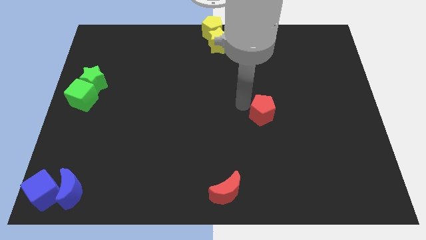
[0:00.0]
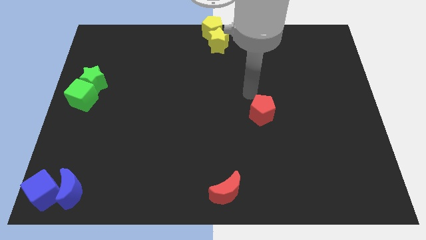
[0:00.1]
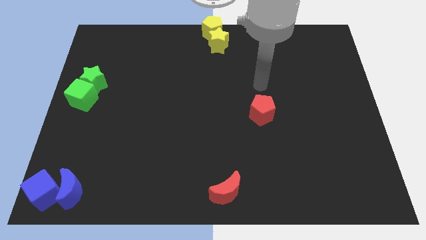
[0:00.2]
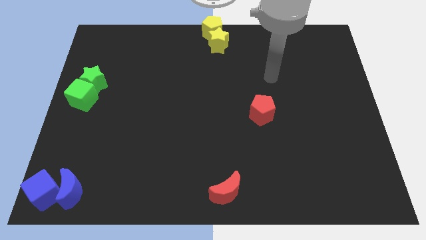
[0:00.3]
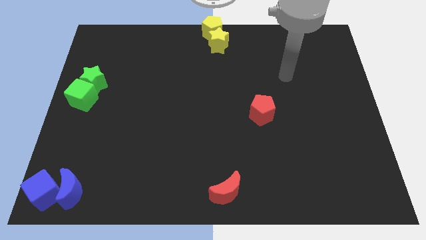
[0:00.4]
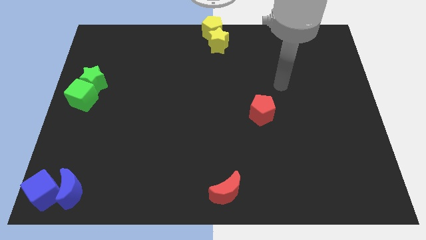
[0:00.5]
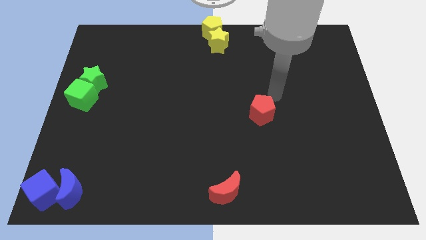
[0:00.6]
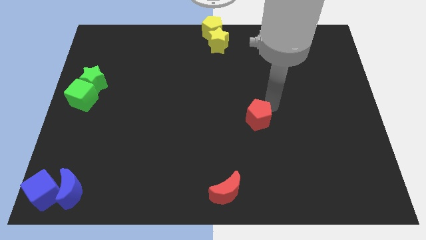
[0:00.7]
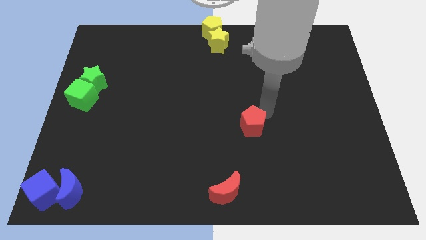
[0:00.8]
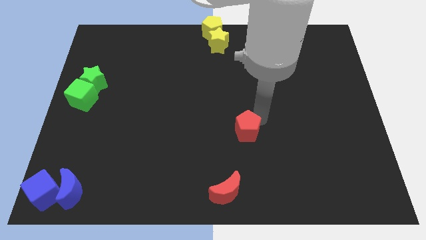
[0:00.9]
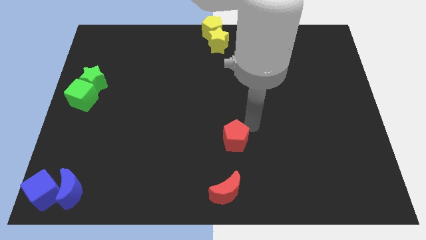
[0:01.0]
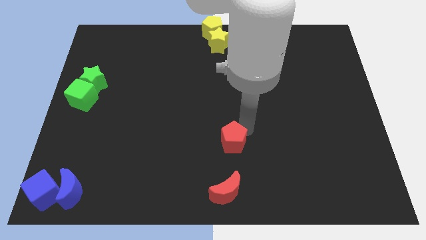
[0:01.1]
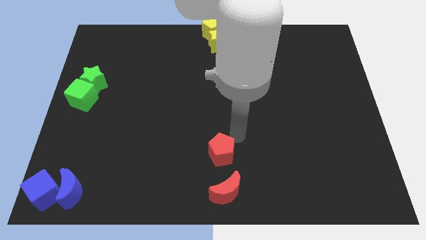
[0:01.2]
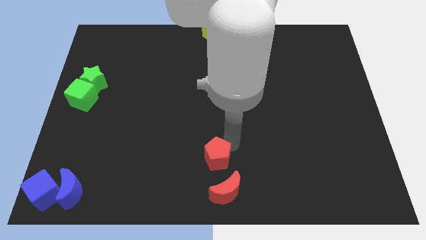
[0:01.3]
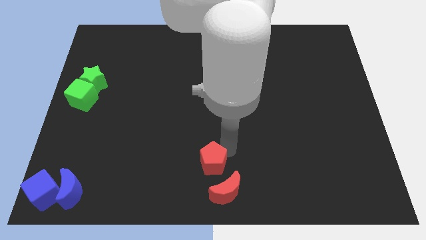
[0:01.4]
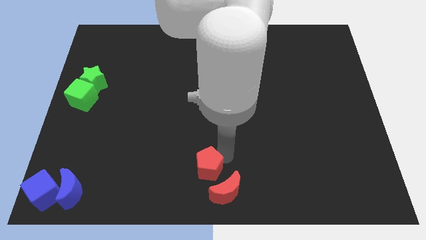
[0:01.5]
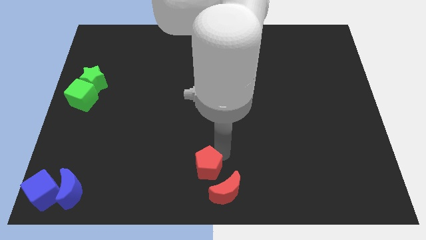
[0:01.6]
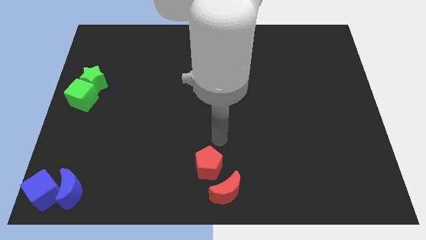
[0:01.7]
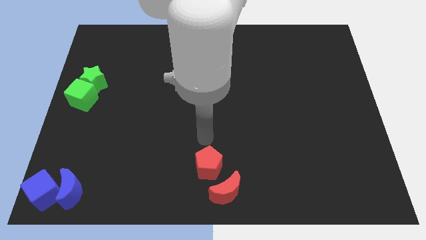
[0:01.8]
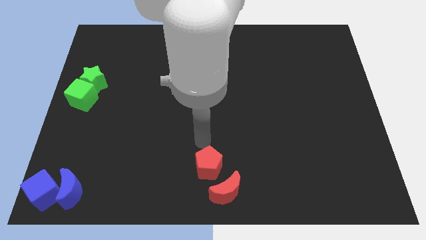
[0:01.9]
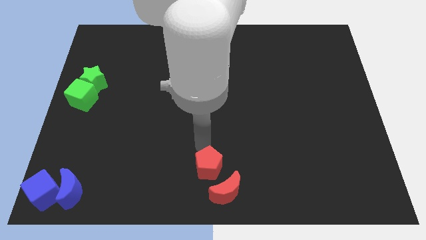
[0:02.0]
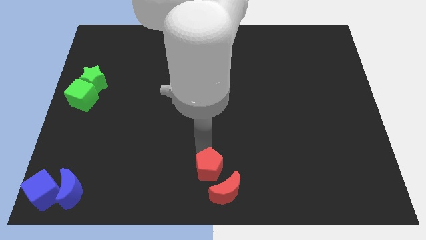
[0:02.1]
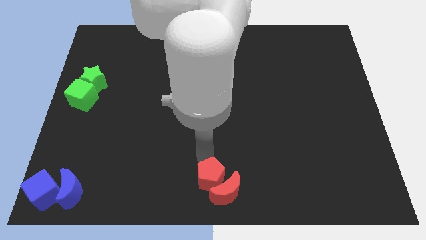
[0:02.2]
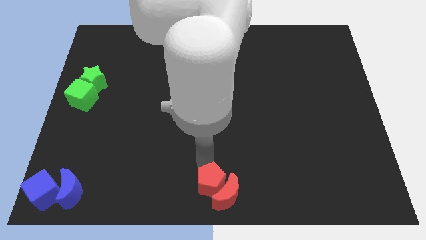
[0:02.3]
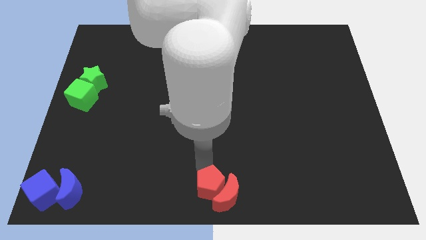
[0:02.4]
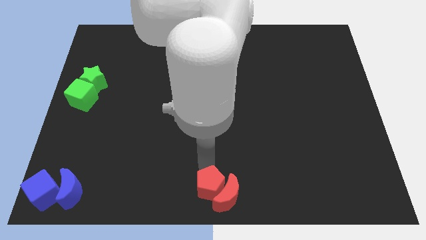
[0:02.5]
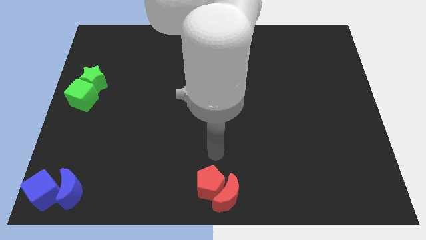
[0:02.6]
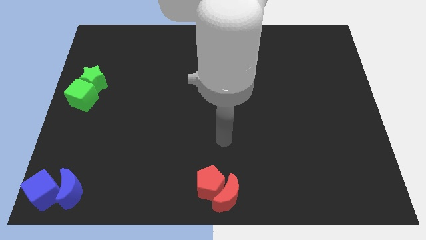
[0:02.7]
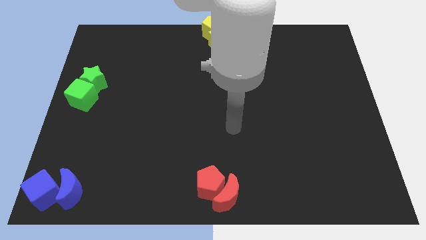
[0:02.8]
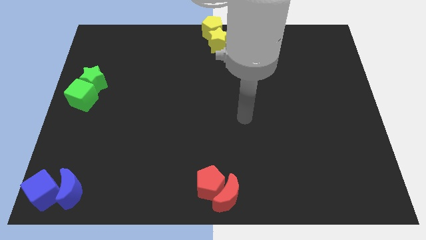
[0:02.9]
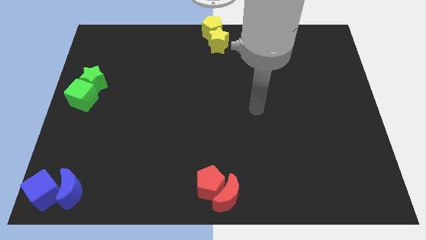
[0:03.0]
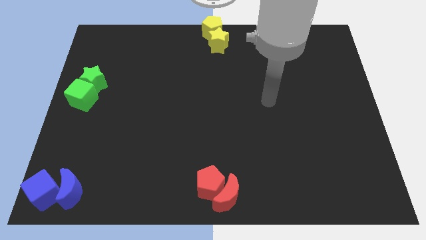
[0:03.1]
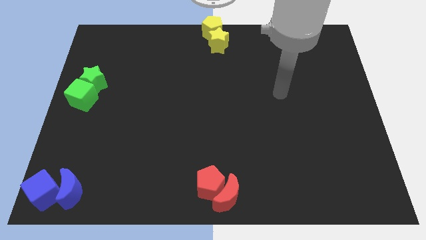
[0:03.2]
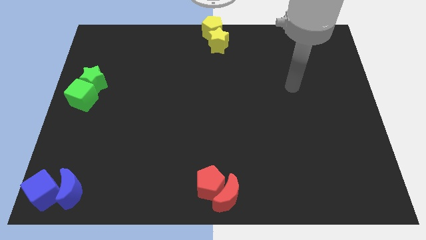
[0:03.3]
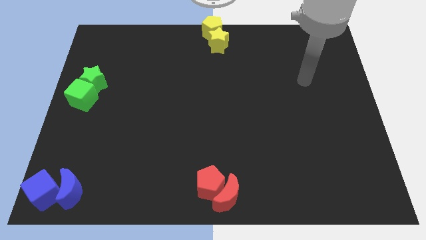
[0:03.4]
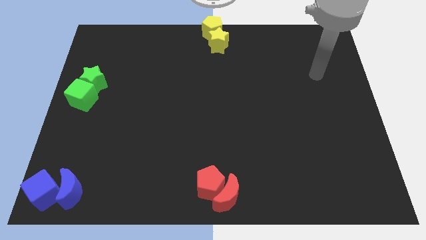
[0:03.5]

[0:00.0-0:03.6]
move red pentagon to the top left side of the red crescent

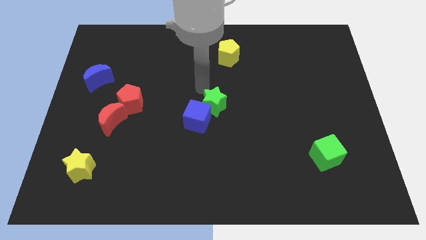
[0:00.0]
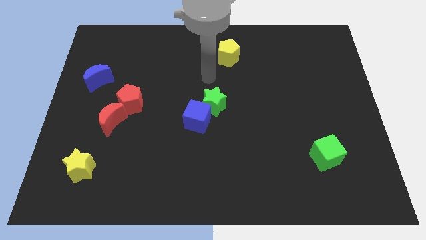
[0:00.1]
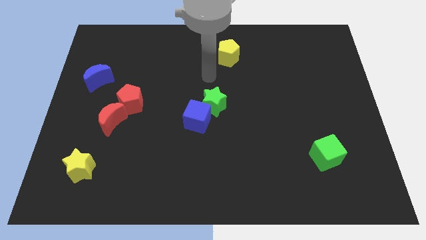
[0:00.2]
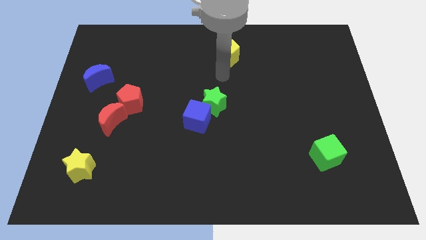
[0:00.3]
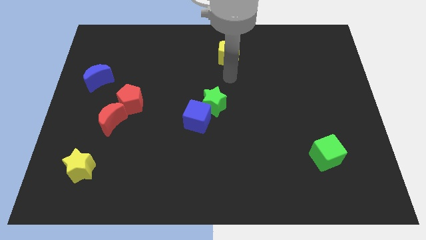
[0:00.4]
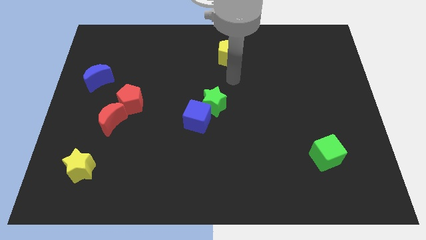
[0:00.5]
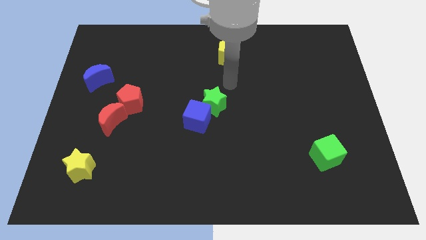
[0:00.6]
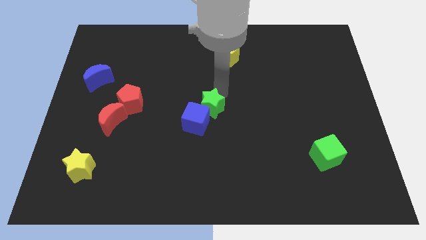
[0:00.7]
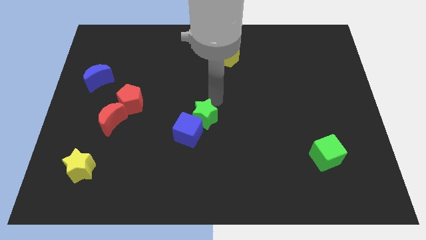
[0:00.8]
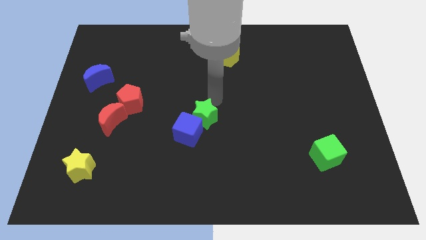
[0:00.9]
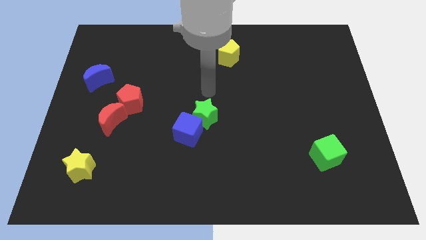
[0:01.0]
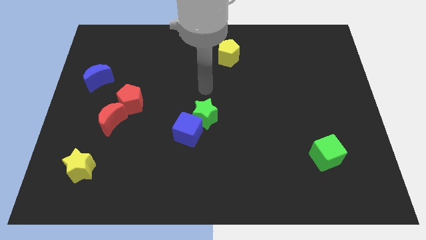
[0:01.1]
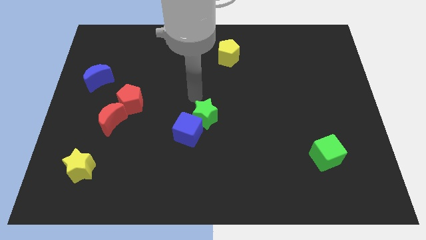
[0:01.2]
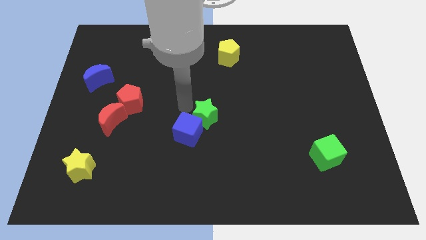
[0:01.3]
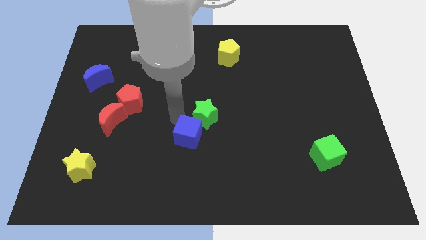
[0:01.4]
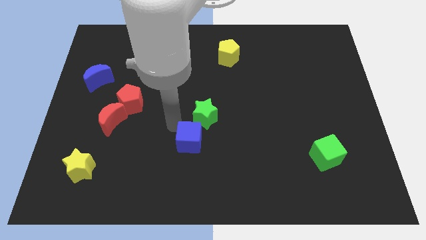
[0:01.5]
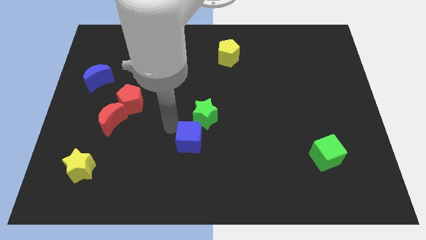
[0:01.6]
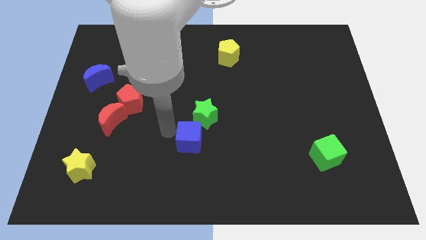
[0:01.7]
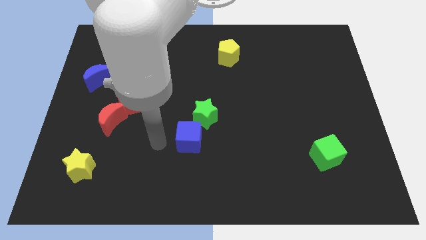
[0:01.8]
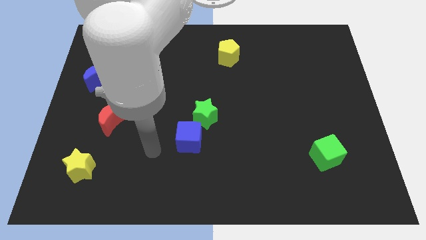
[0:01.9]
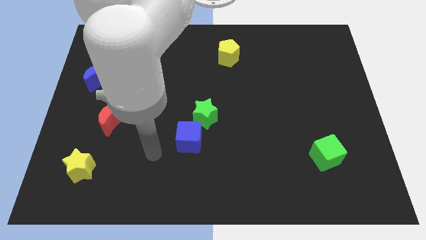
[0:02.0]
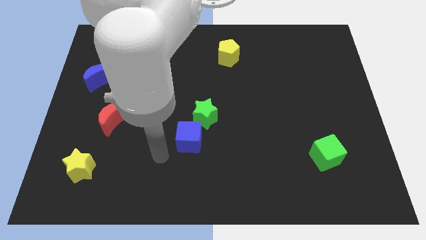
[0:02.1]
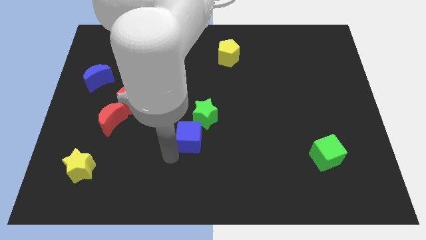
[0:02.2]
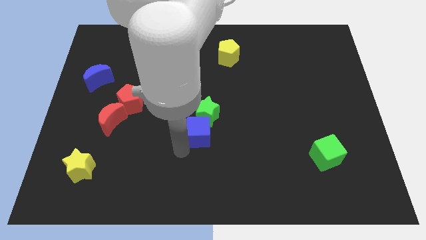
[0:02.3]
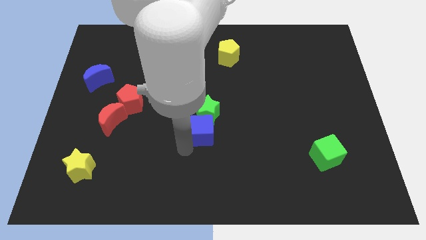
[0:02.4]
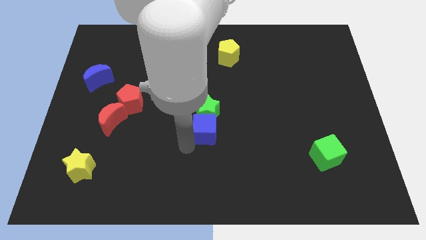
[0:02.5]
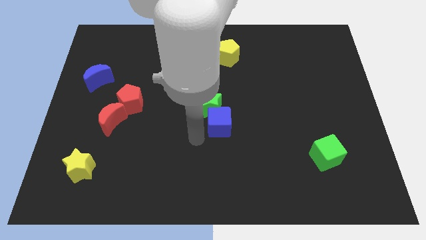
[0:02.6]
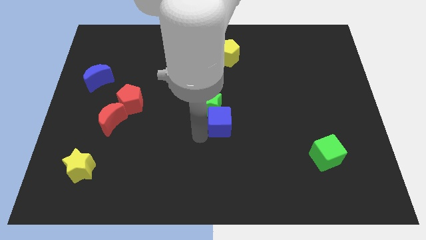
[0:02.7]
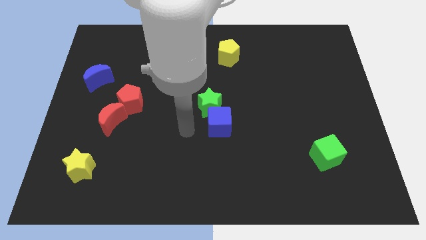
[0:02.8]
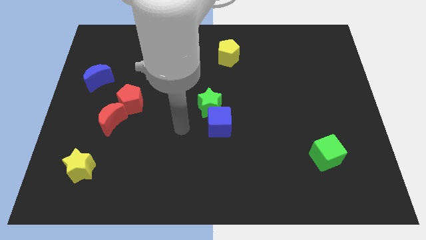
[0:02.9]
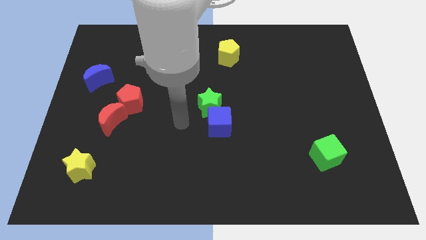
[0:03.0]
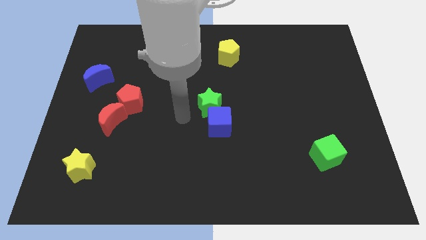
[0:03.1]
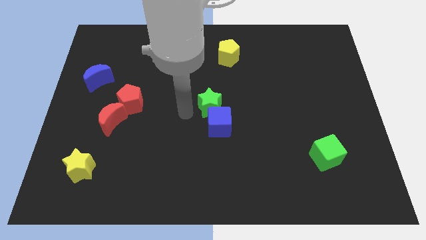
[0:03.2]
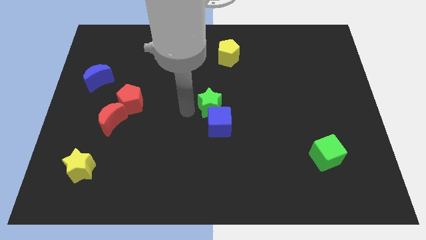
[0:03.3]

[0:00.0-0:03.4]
move the blue cube towards the green star

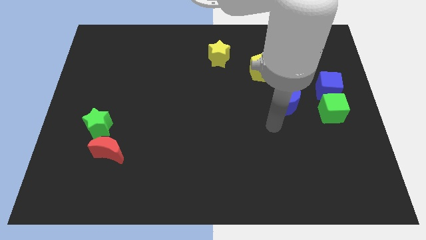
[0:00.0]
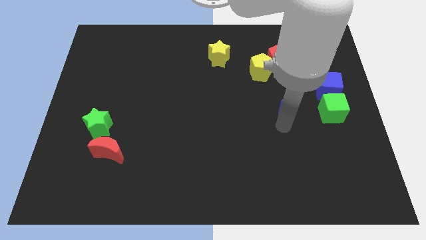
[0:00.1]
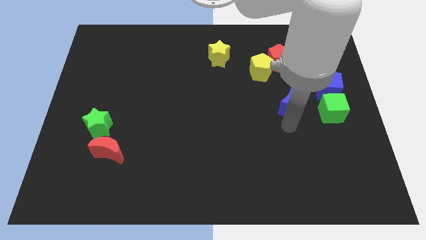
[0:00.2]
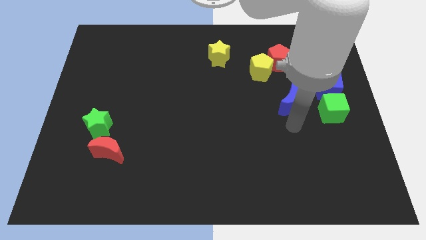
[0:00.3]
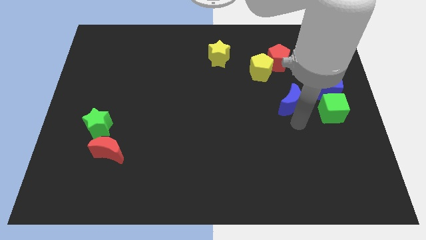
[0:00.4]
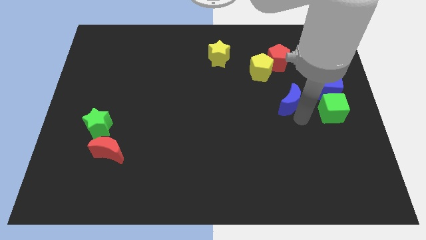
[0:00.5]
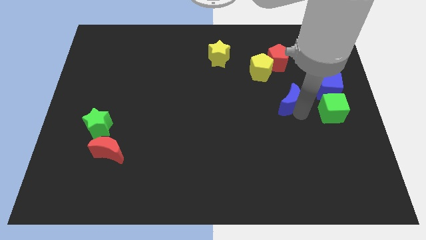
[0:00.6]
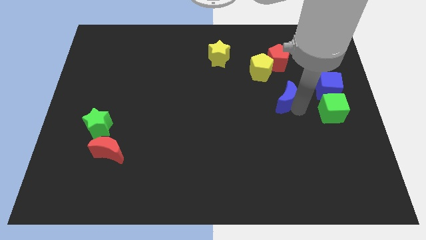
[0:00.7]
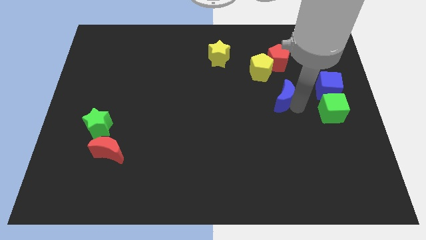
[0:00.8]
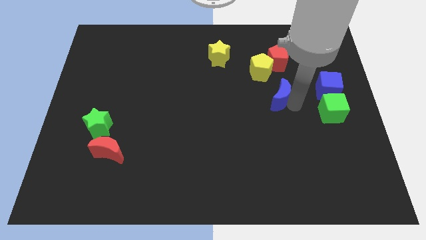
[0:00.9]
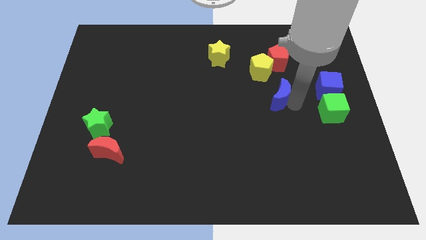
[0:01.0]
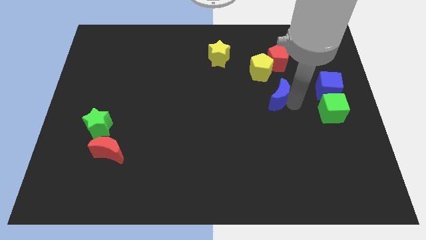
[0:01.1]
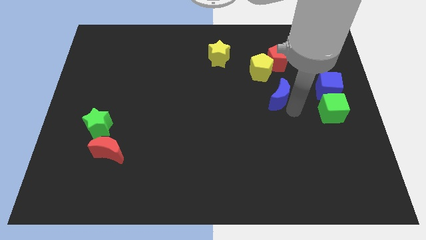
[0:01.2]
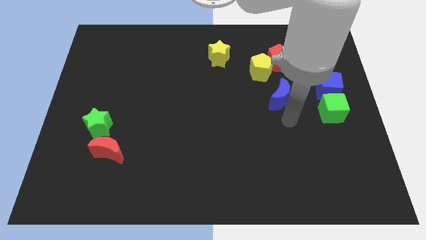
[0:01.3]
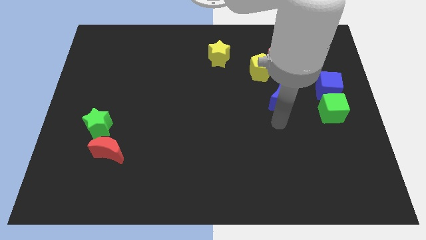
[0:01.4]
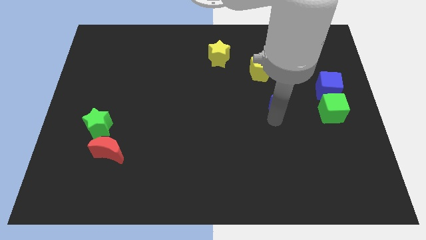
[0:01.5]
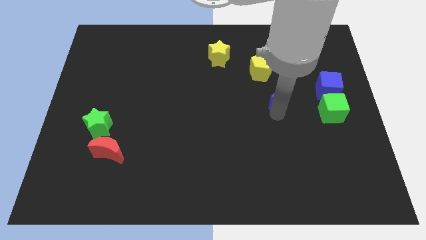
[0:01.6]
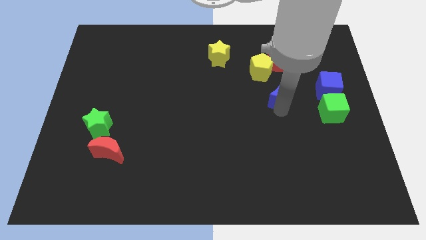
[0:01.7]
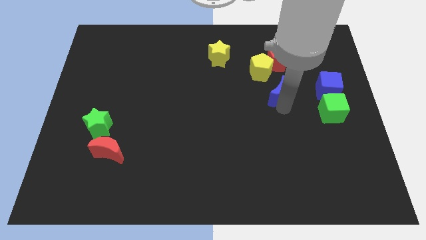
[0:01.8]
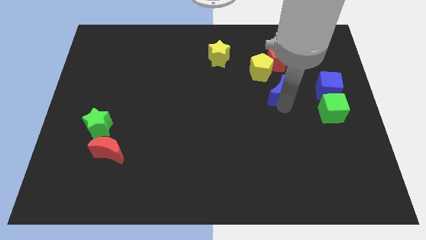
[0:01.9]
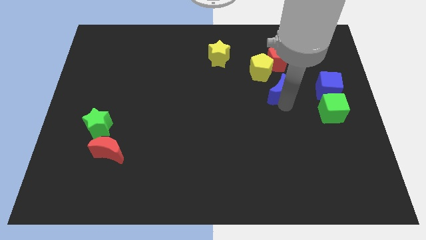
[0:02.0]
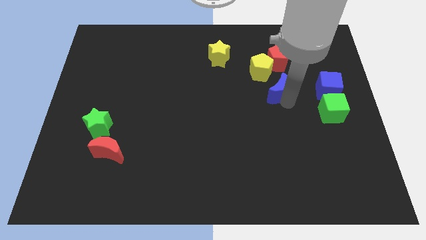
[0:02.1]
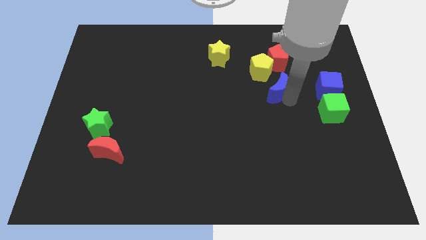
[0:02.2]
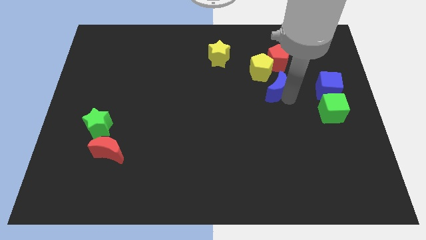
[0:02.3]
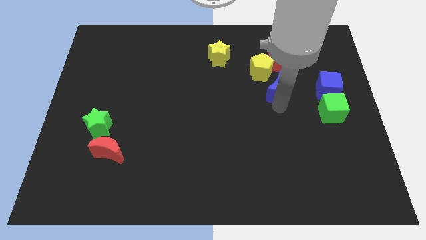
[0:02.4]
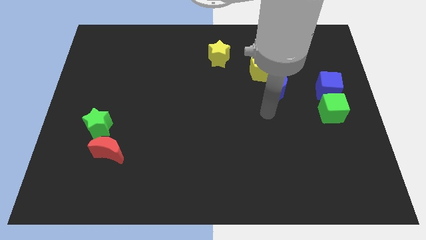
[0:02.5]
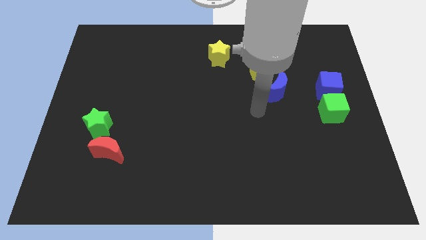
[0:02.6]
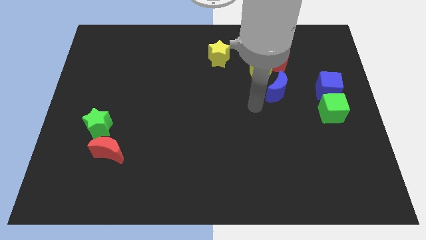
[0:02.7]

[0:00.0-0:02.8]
push the blue moon upwards slightly
